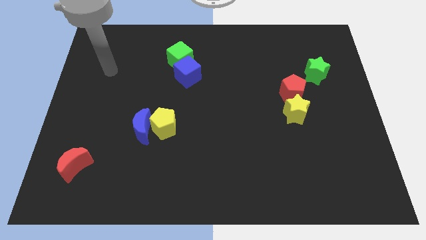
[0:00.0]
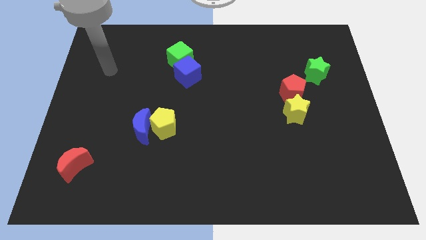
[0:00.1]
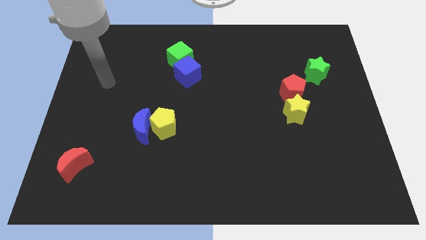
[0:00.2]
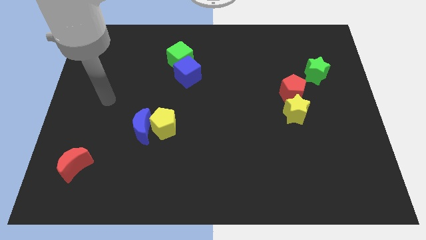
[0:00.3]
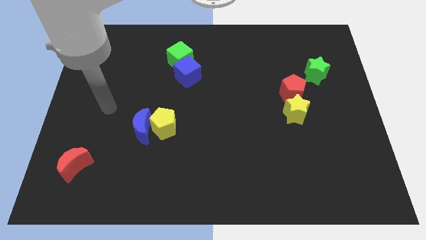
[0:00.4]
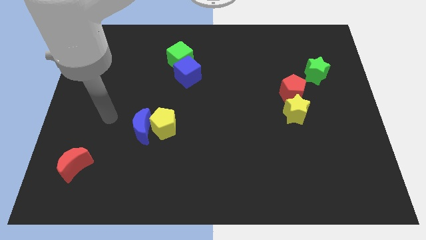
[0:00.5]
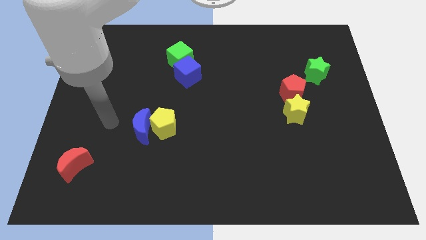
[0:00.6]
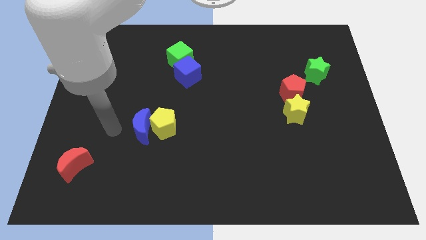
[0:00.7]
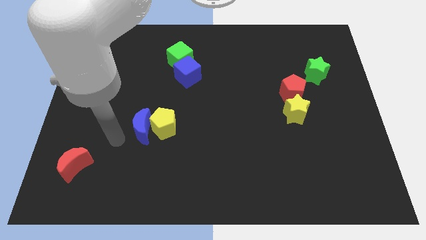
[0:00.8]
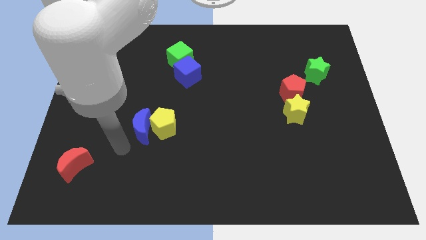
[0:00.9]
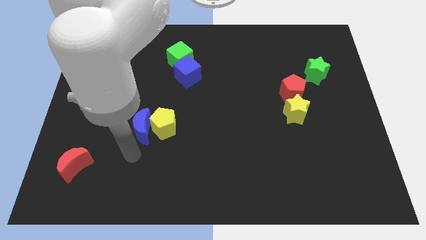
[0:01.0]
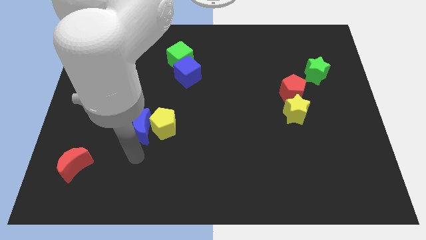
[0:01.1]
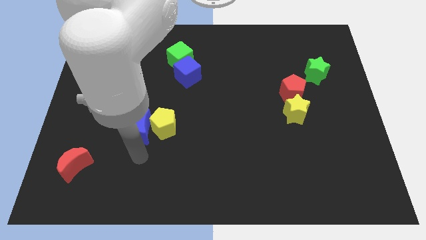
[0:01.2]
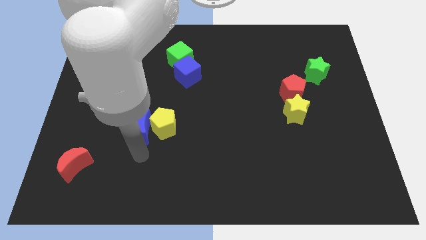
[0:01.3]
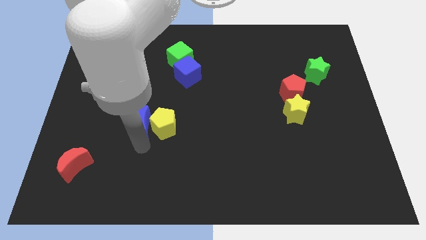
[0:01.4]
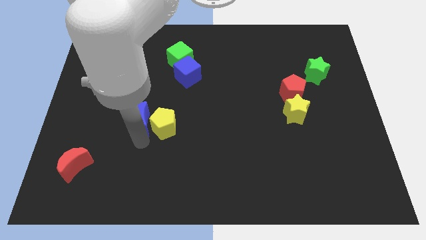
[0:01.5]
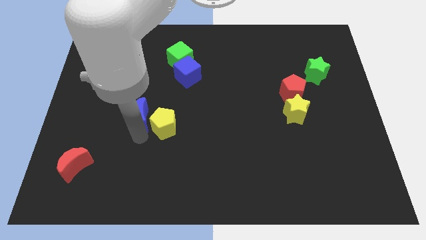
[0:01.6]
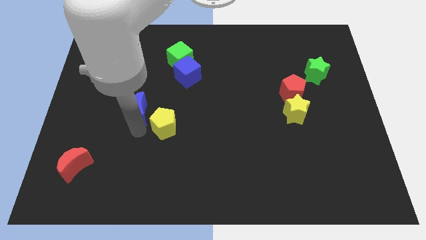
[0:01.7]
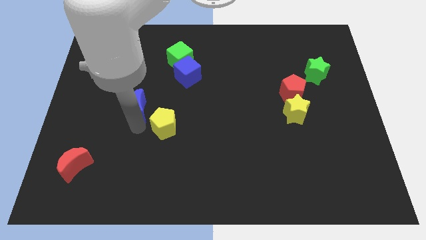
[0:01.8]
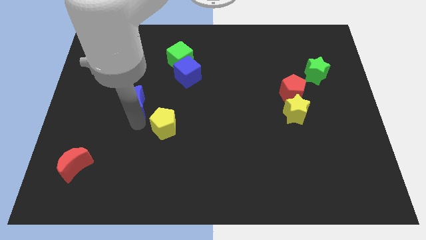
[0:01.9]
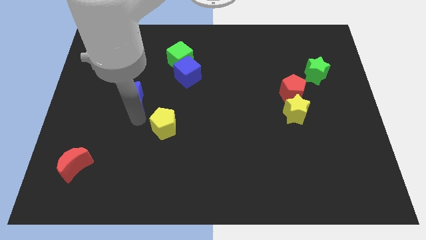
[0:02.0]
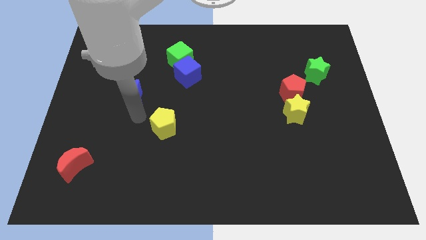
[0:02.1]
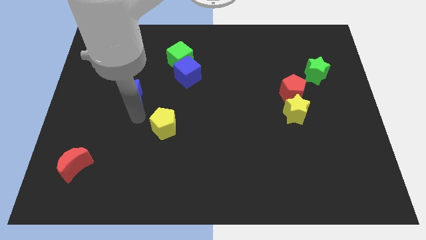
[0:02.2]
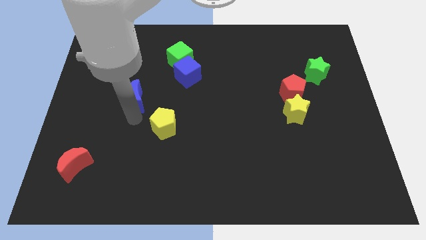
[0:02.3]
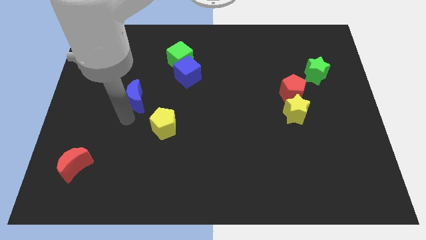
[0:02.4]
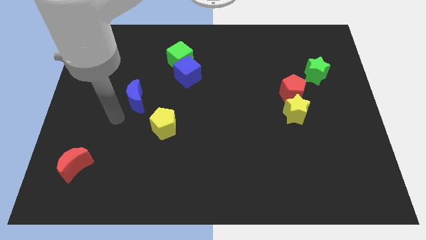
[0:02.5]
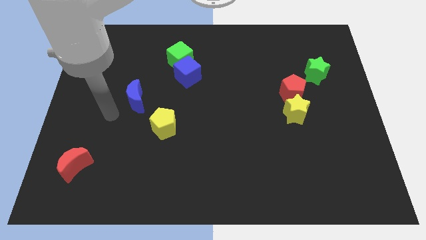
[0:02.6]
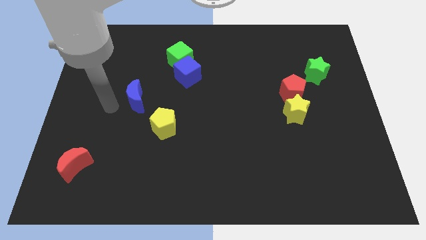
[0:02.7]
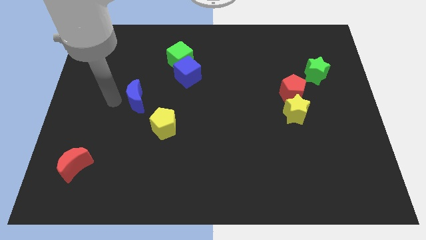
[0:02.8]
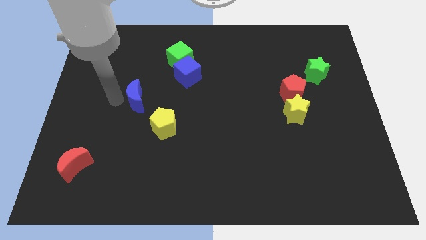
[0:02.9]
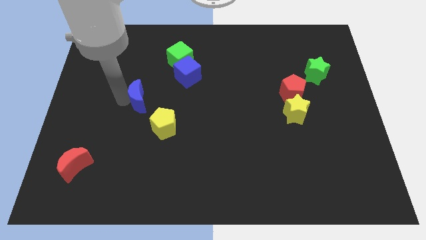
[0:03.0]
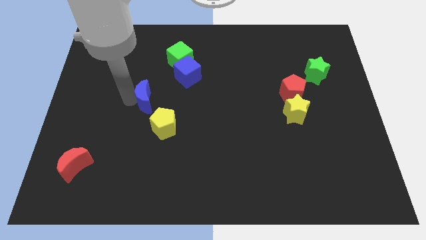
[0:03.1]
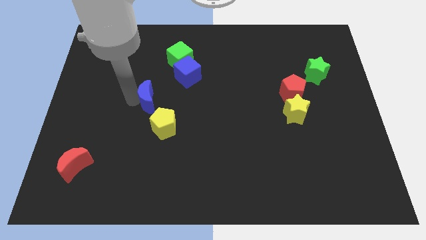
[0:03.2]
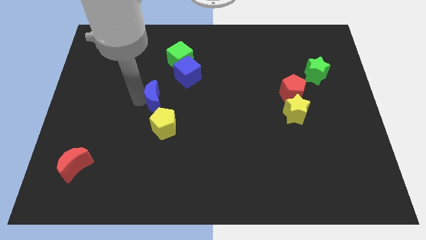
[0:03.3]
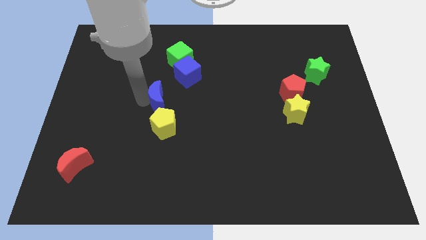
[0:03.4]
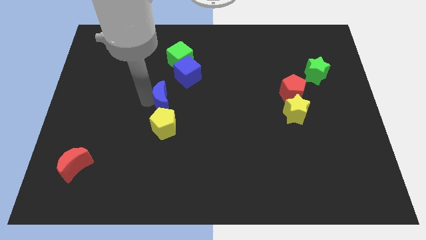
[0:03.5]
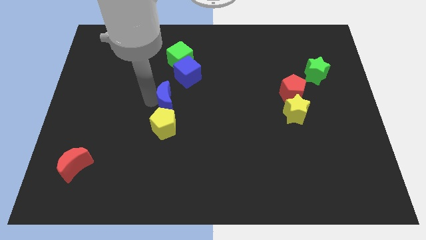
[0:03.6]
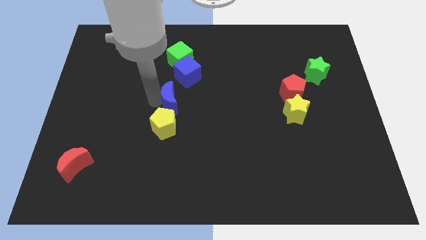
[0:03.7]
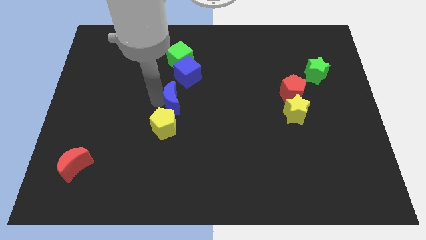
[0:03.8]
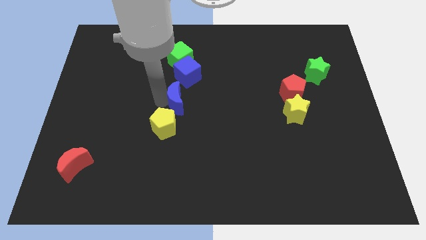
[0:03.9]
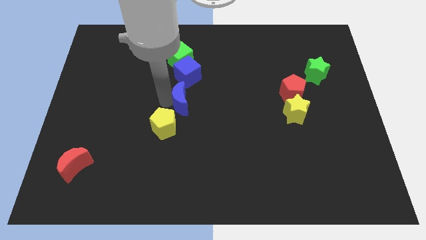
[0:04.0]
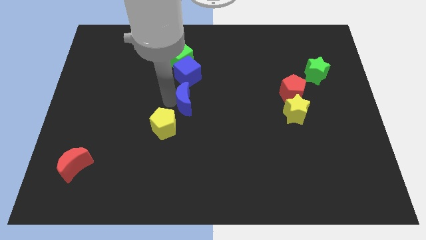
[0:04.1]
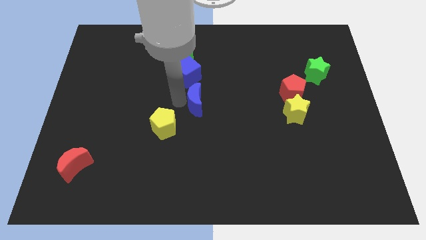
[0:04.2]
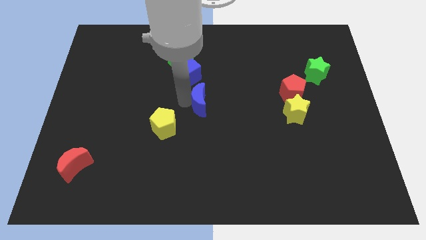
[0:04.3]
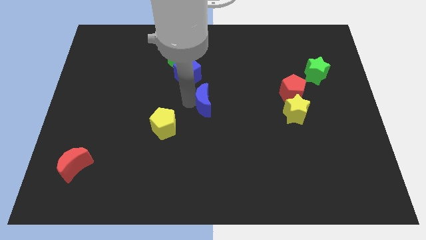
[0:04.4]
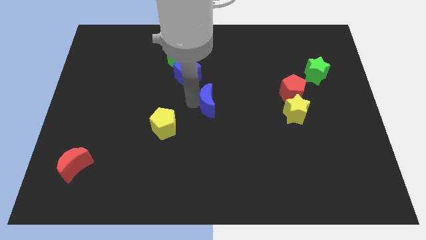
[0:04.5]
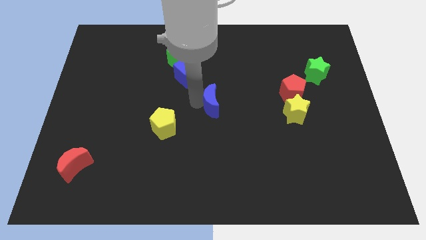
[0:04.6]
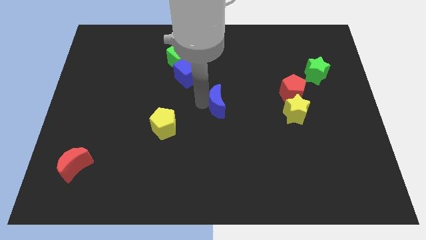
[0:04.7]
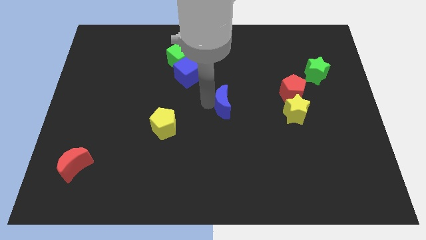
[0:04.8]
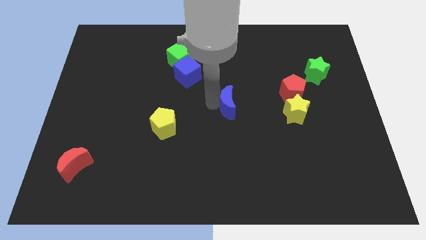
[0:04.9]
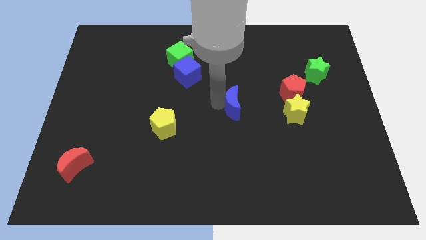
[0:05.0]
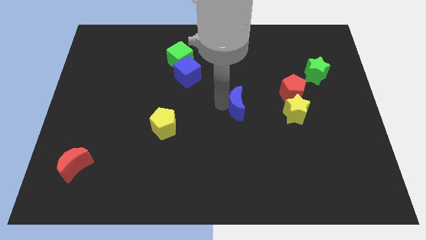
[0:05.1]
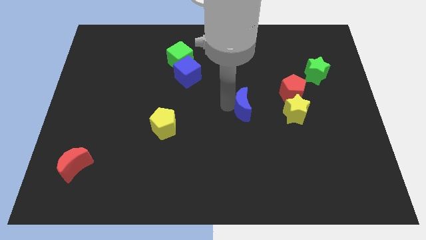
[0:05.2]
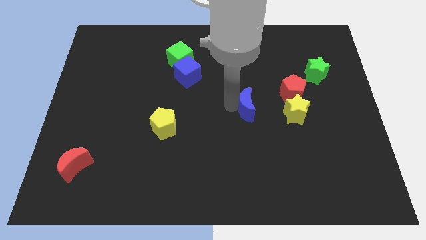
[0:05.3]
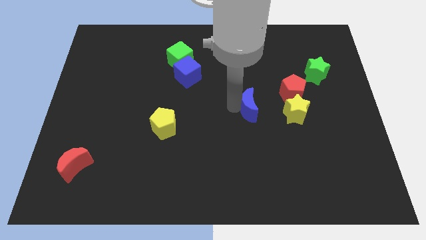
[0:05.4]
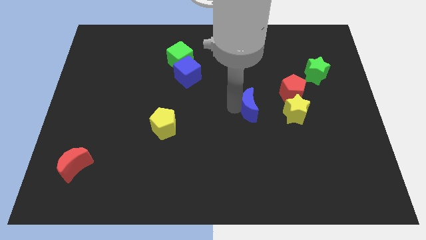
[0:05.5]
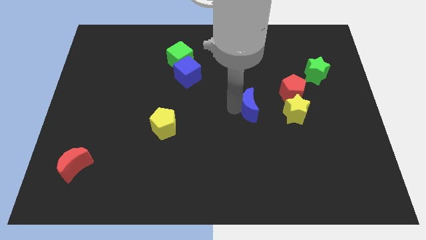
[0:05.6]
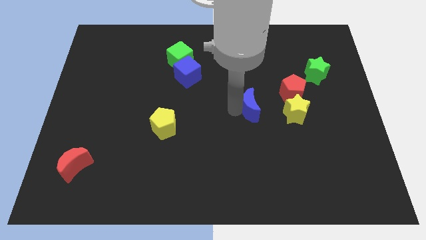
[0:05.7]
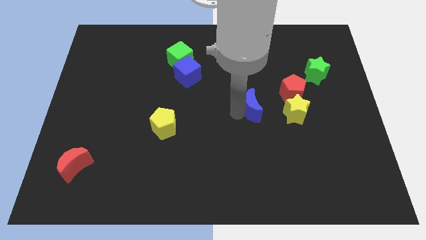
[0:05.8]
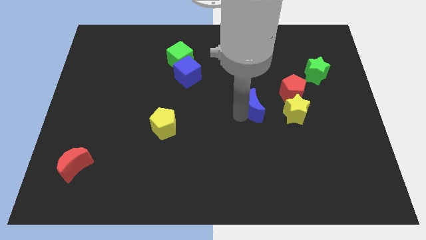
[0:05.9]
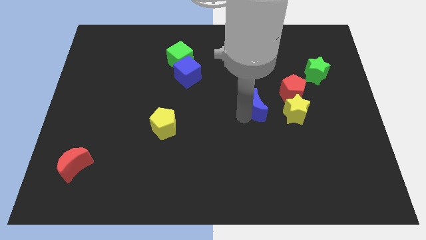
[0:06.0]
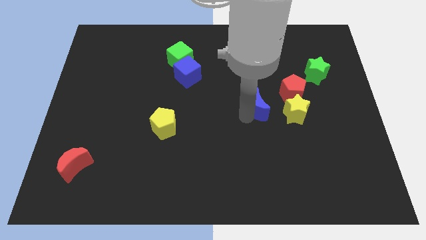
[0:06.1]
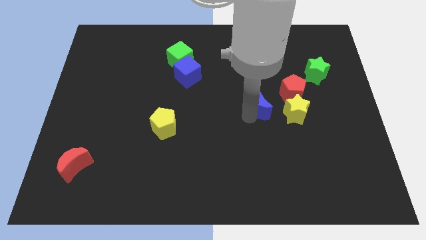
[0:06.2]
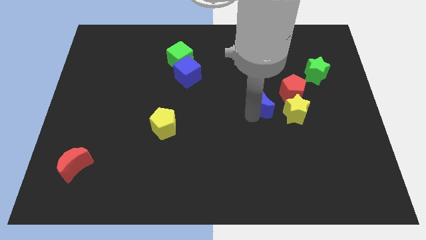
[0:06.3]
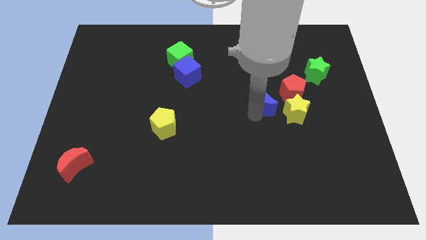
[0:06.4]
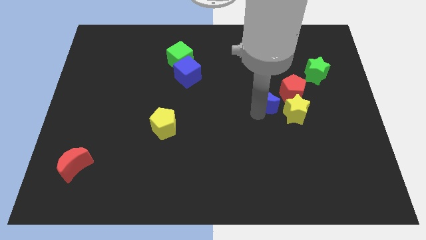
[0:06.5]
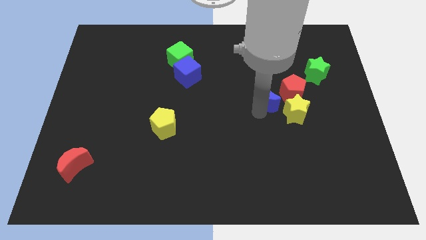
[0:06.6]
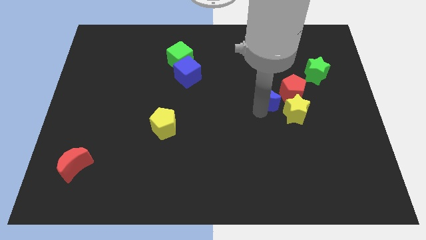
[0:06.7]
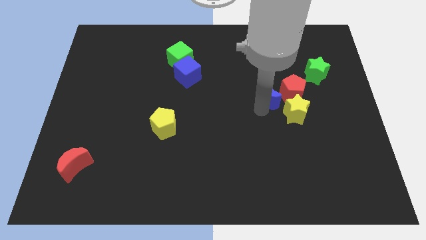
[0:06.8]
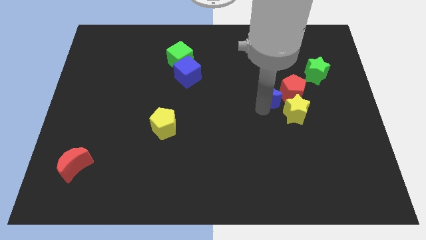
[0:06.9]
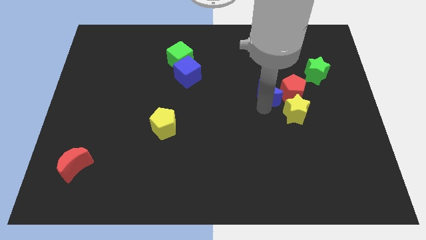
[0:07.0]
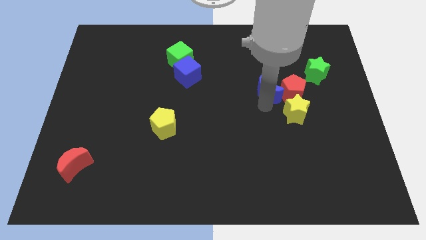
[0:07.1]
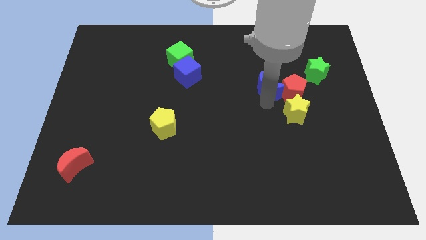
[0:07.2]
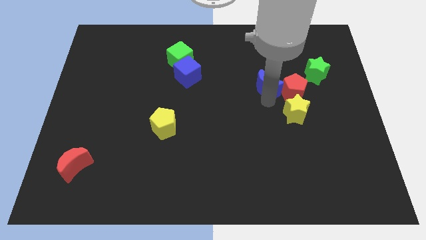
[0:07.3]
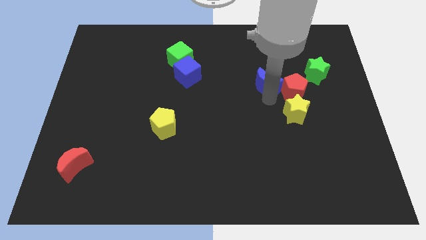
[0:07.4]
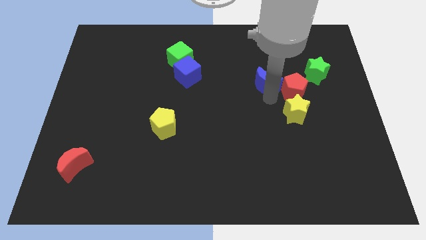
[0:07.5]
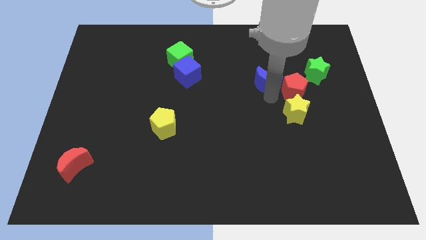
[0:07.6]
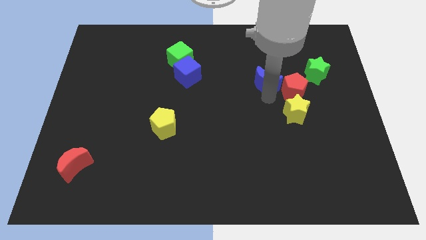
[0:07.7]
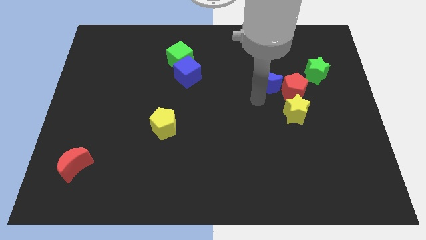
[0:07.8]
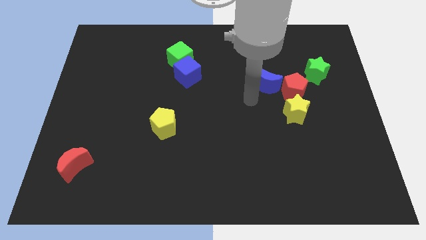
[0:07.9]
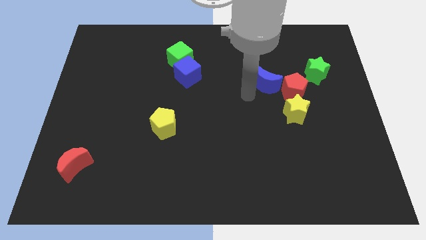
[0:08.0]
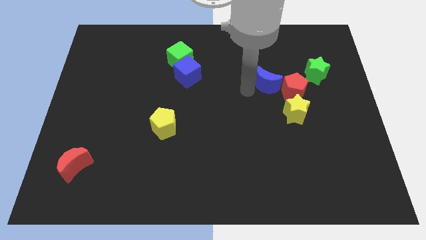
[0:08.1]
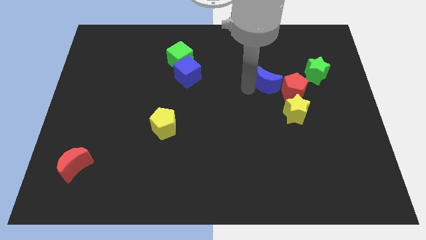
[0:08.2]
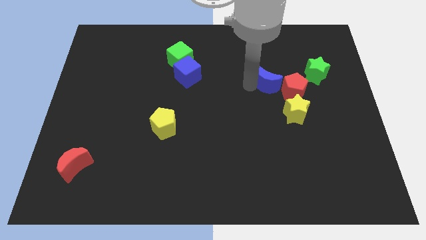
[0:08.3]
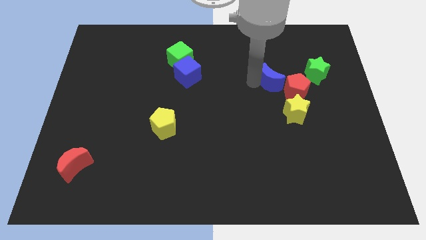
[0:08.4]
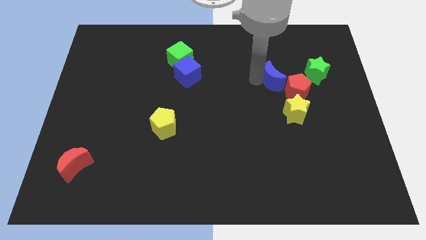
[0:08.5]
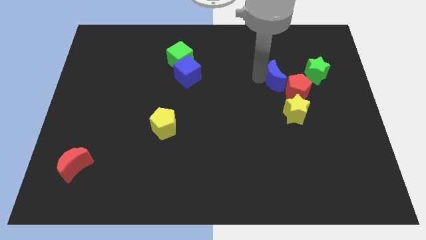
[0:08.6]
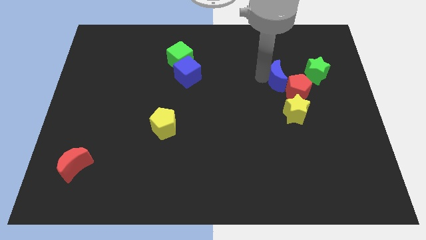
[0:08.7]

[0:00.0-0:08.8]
put the blue moon next to the red pentagon
